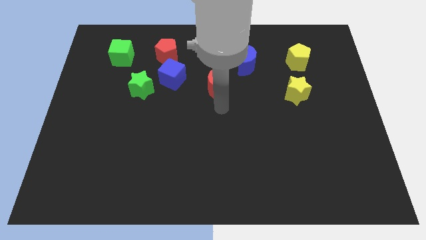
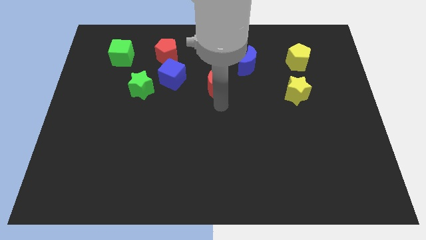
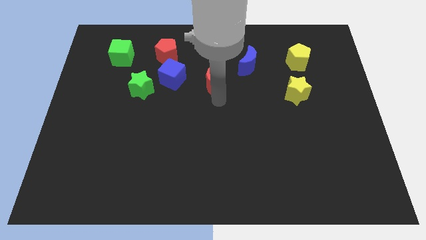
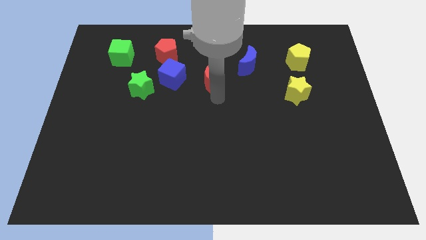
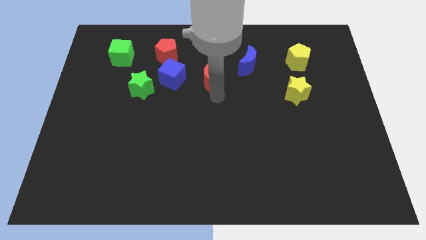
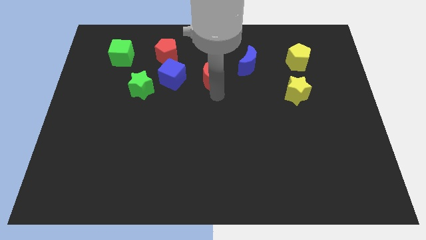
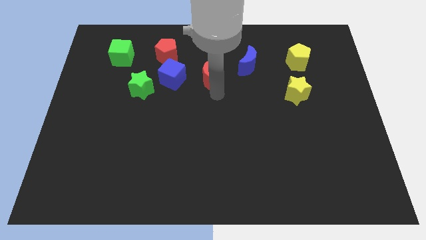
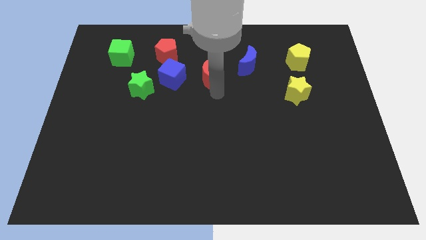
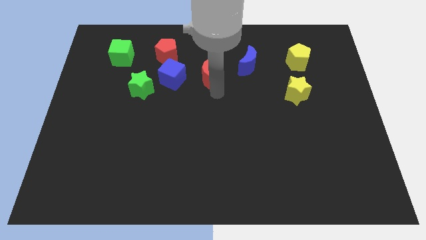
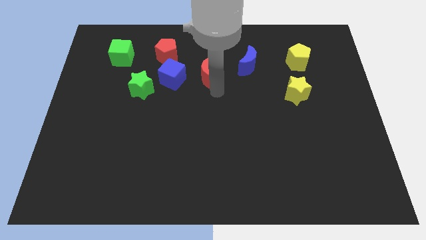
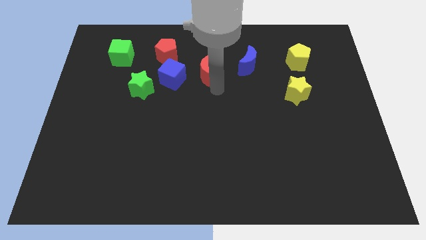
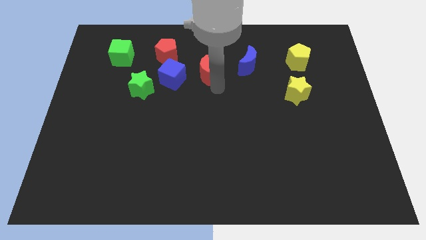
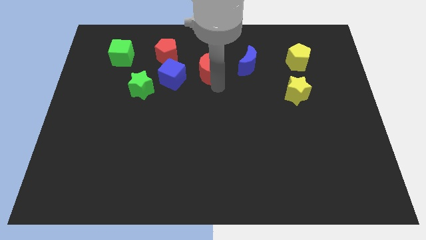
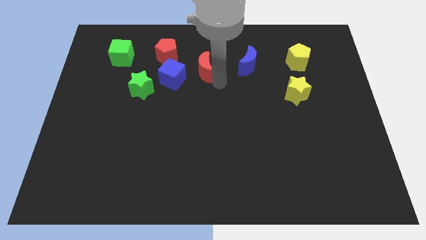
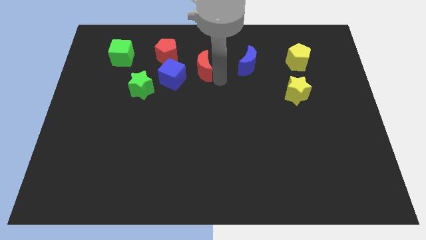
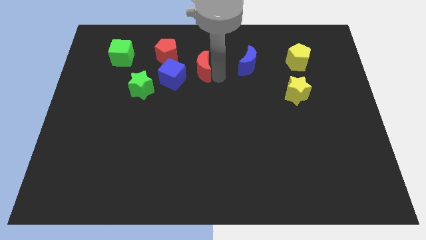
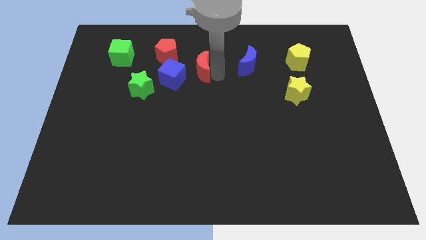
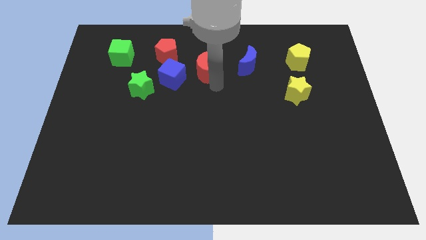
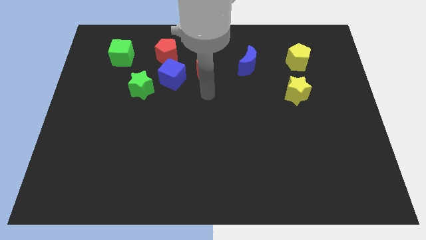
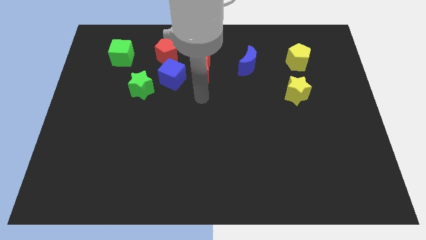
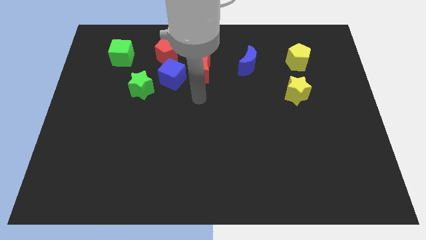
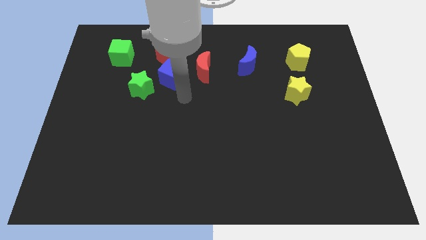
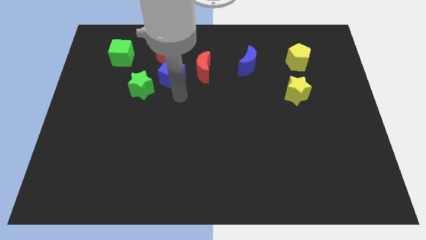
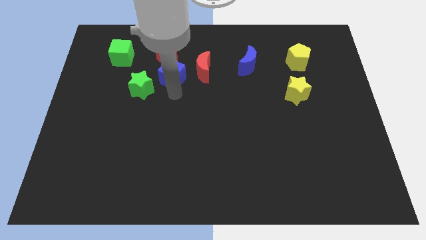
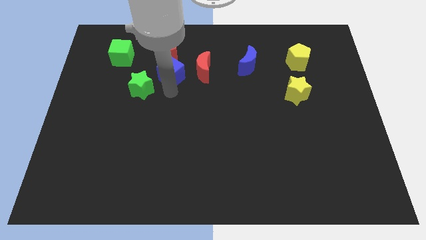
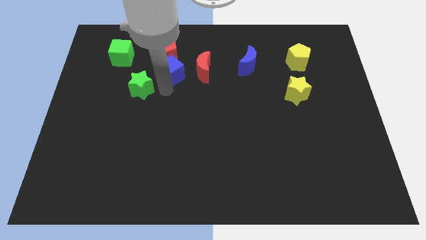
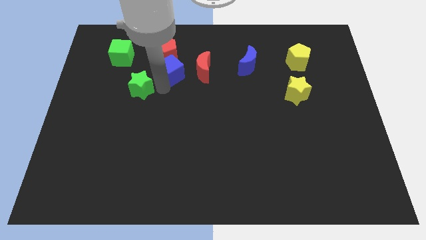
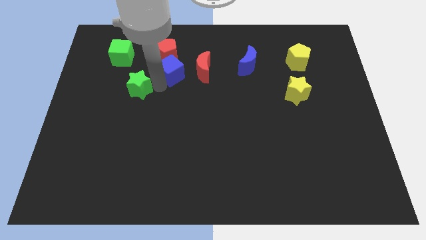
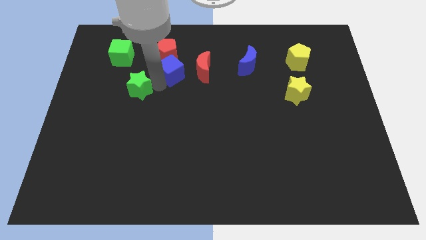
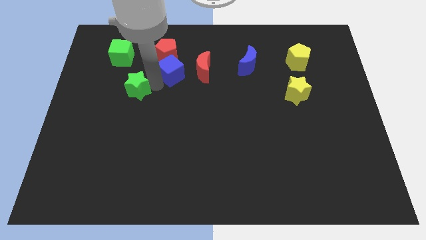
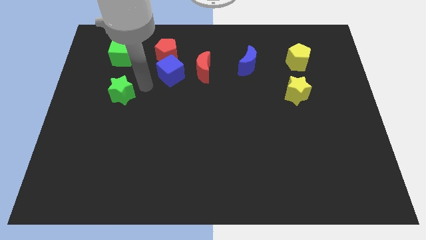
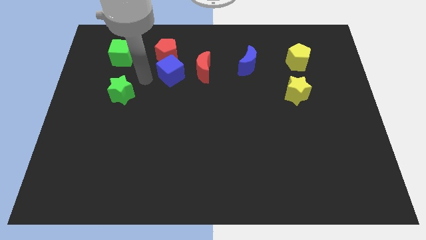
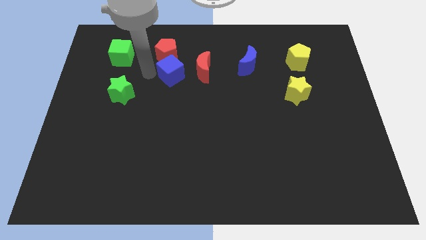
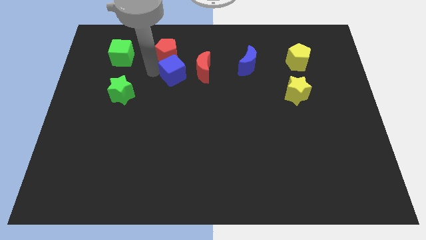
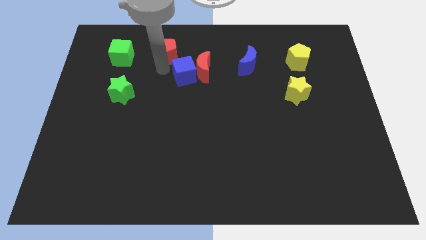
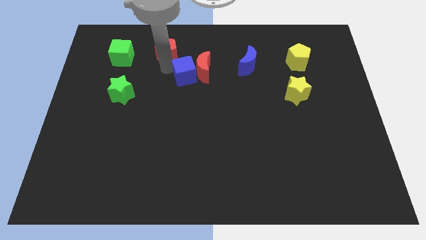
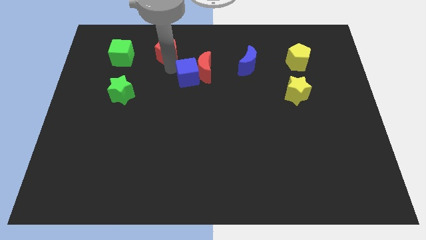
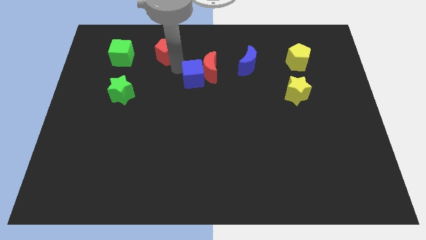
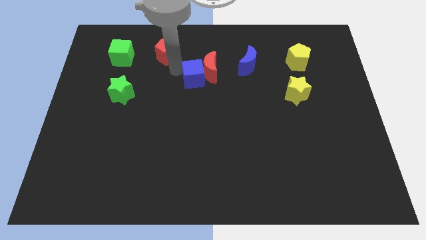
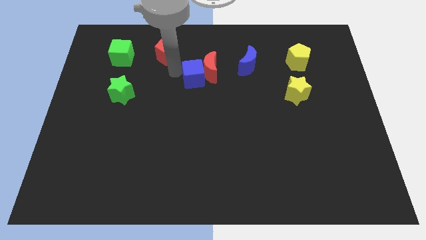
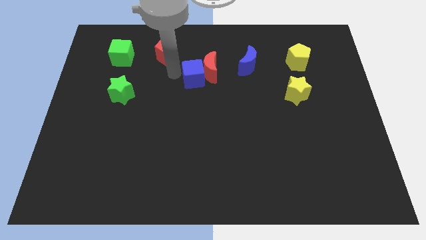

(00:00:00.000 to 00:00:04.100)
place the green star underneath the green cube

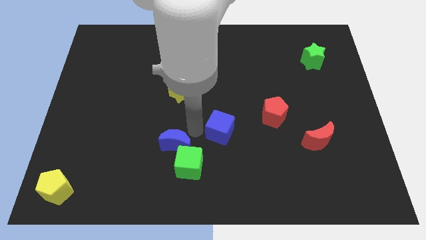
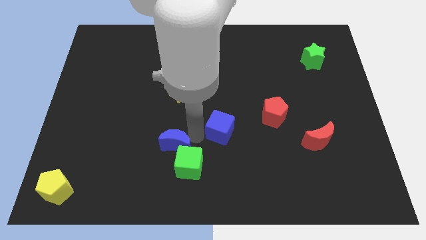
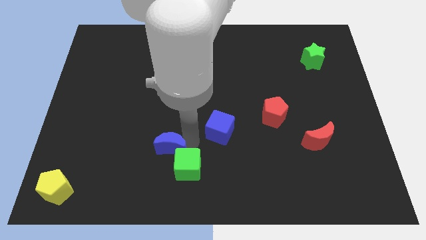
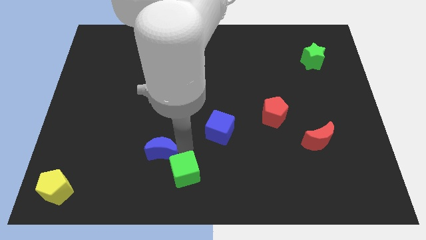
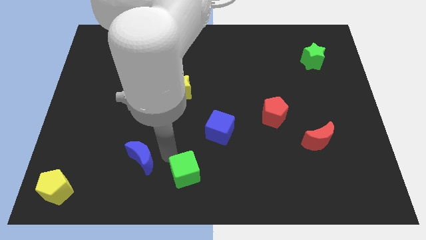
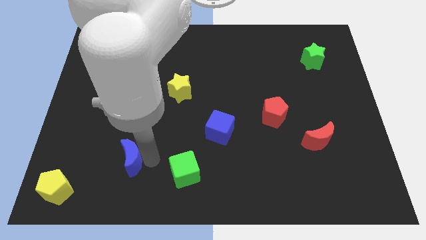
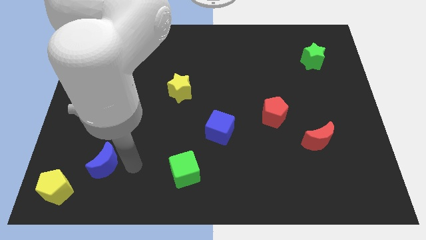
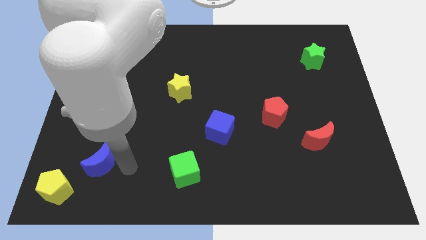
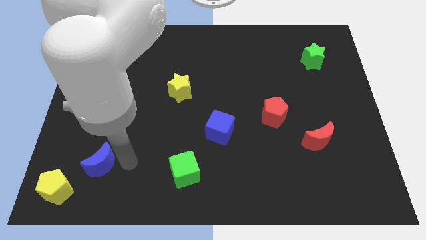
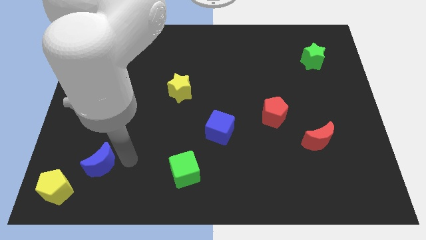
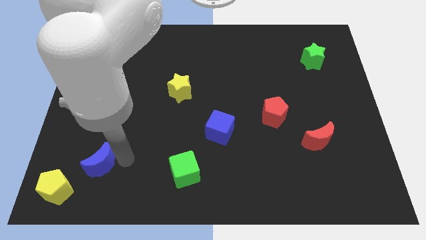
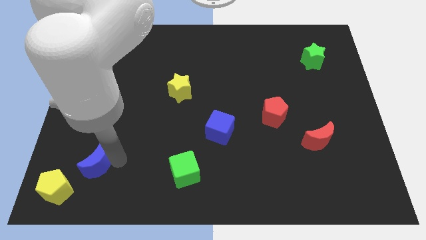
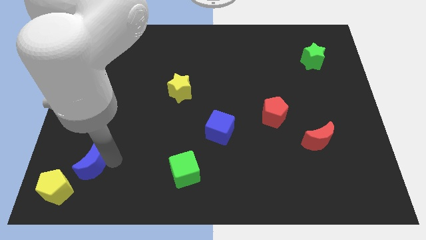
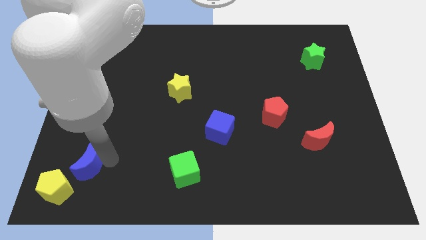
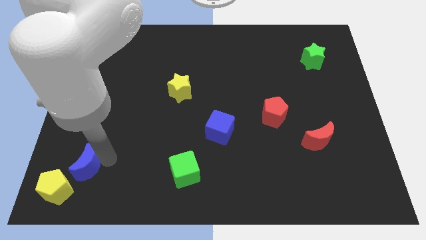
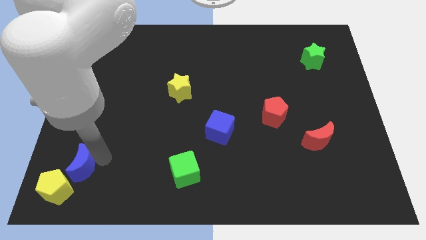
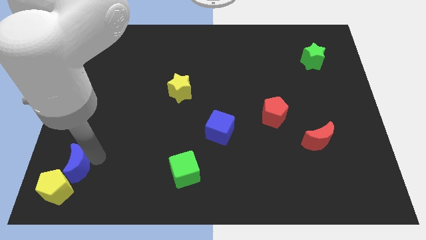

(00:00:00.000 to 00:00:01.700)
separate blue moon and green cube

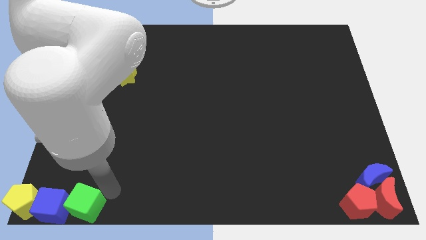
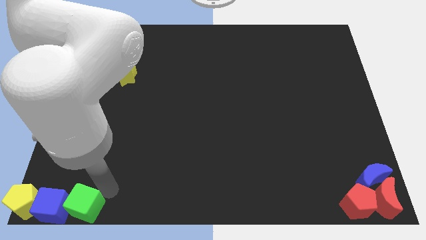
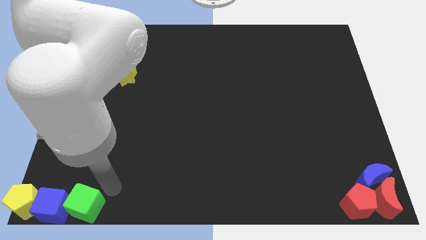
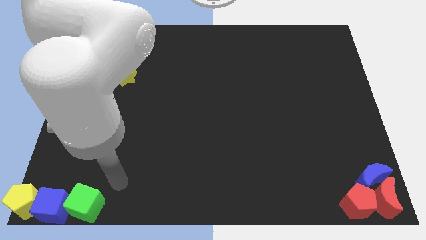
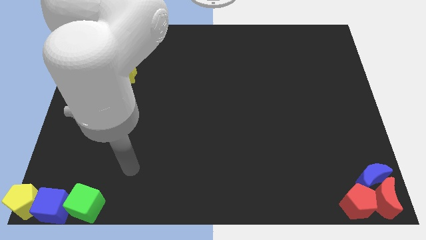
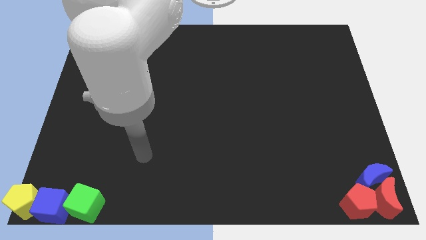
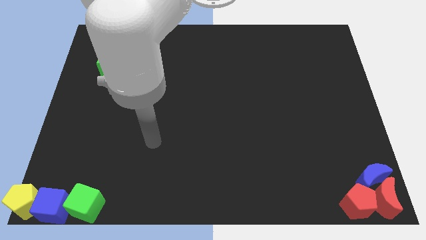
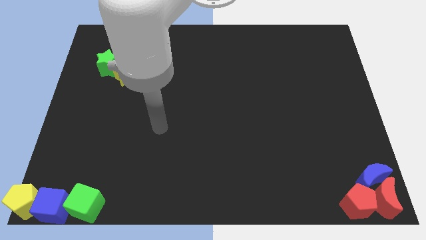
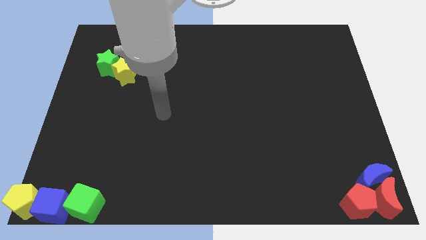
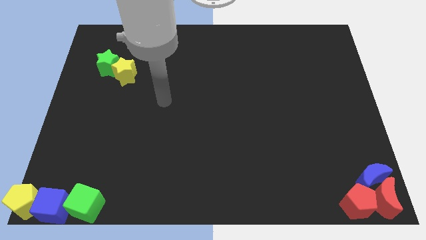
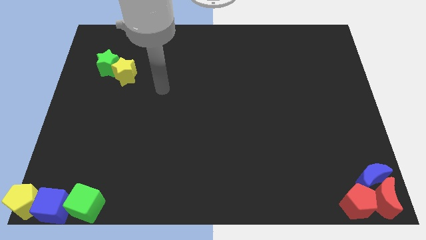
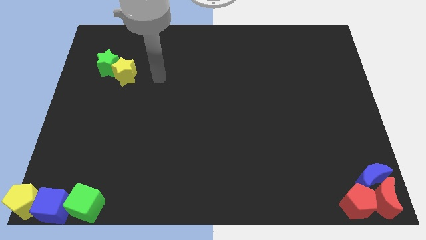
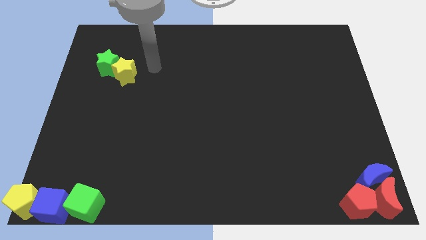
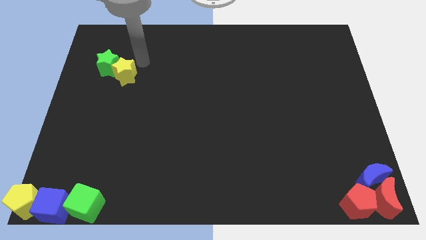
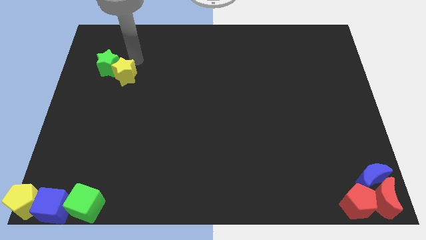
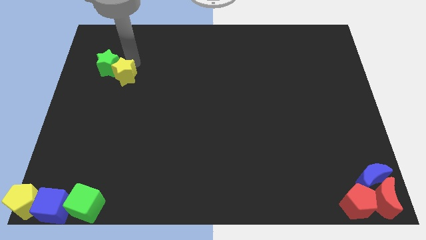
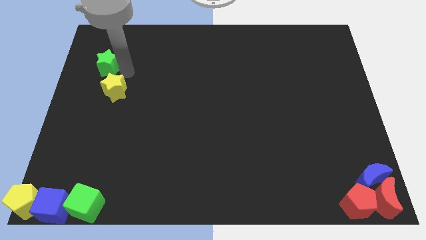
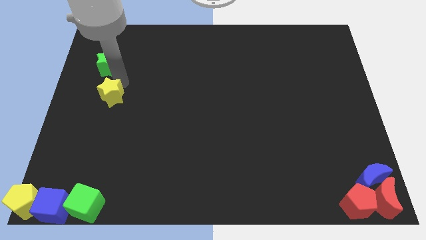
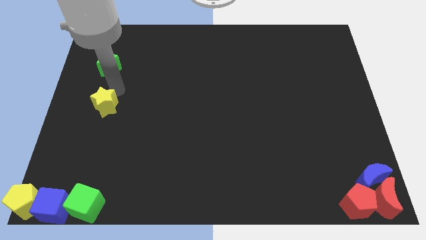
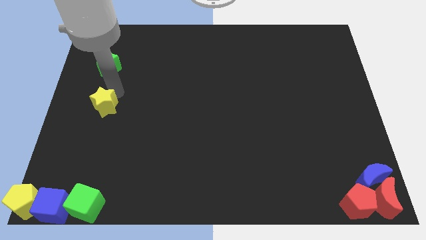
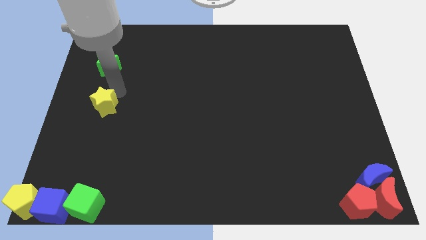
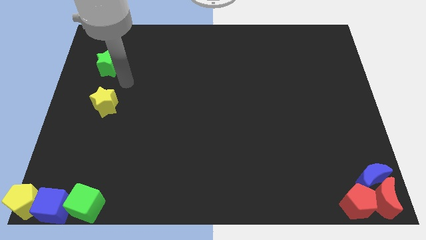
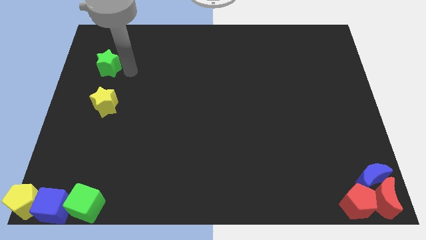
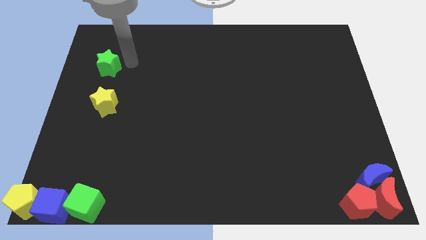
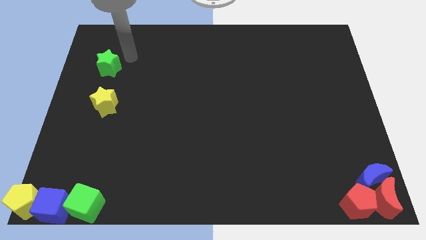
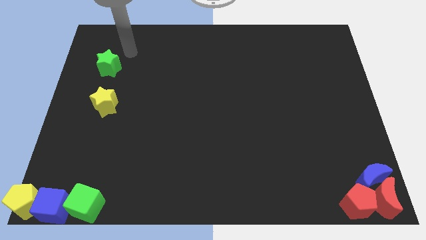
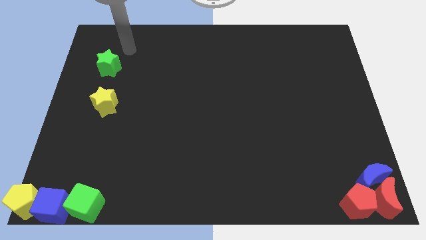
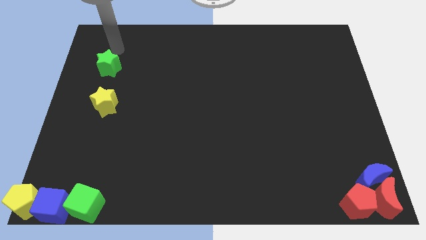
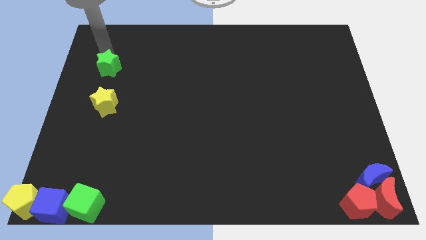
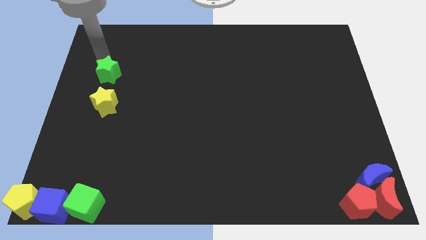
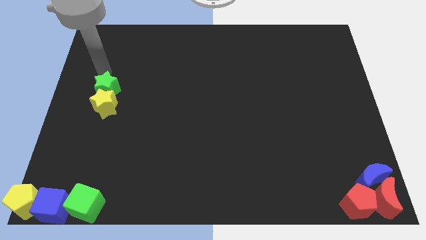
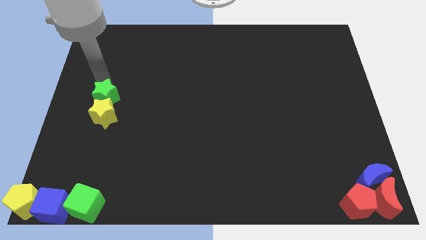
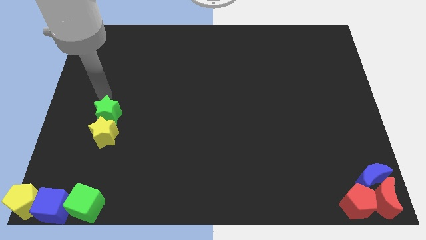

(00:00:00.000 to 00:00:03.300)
separate green star from yellow star
